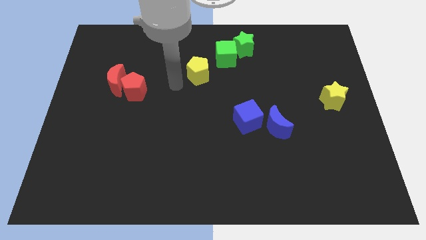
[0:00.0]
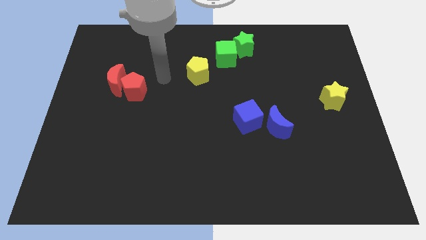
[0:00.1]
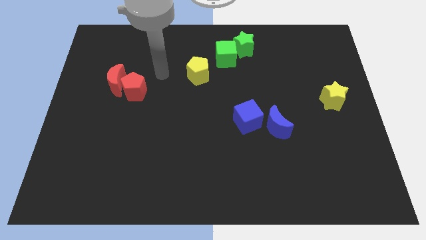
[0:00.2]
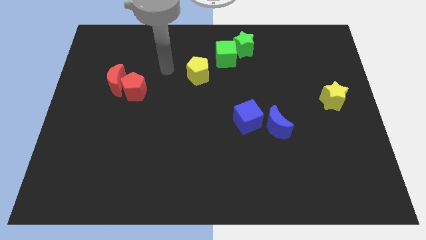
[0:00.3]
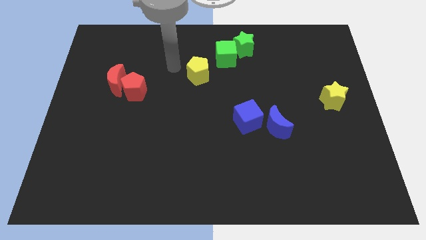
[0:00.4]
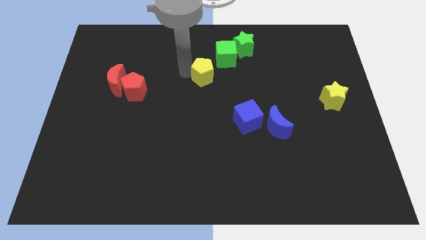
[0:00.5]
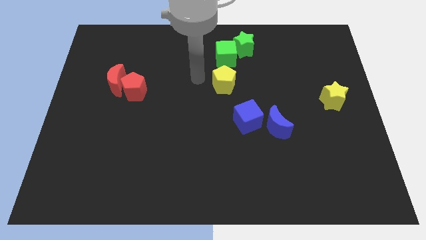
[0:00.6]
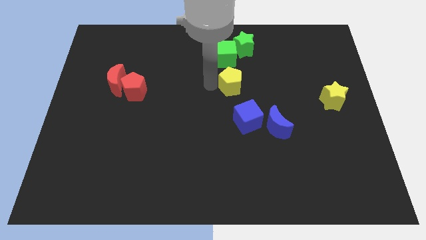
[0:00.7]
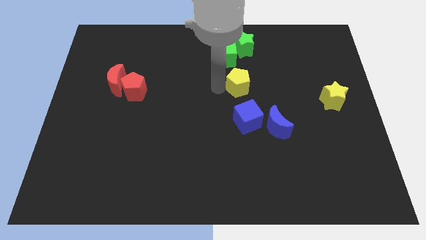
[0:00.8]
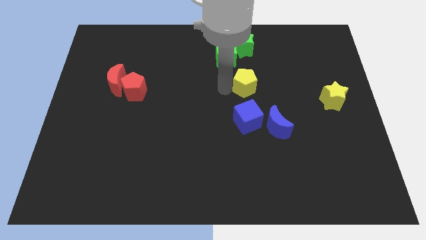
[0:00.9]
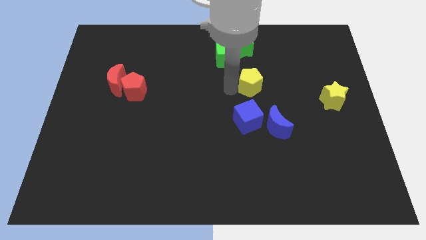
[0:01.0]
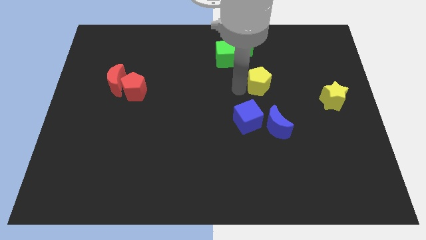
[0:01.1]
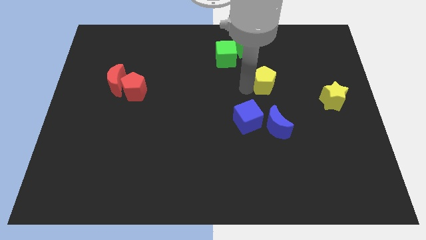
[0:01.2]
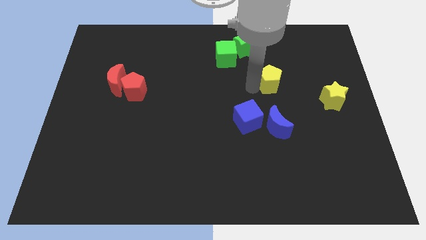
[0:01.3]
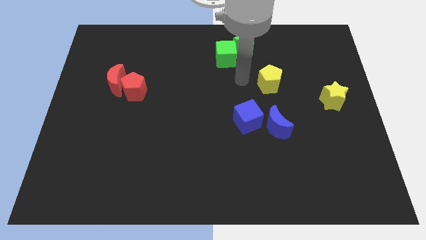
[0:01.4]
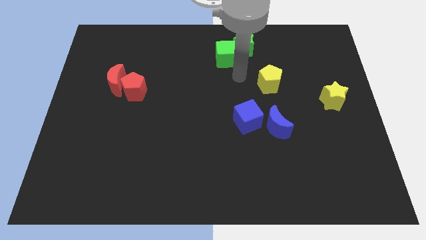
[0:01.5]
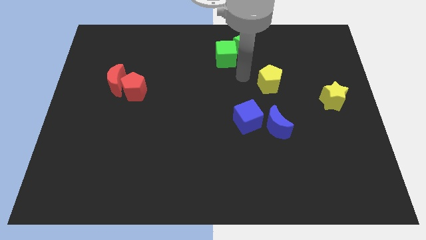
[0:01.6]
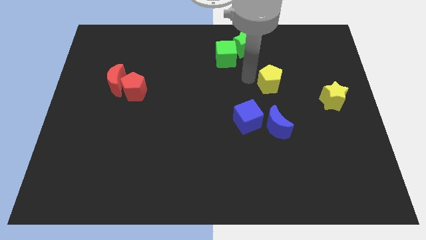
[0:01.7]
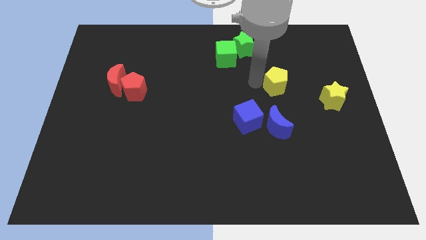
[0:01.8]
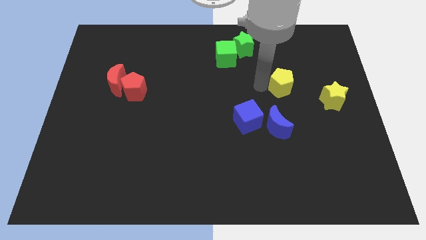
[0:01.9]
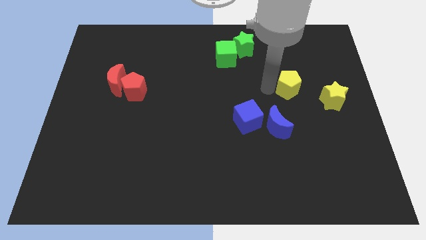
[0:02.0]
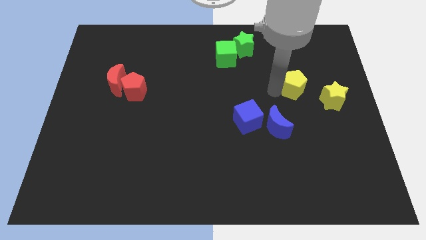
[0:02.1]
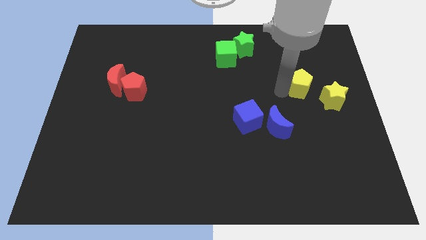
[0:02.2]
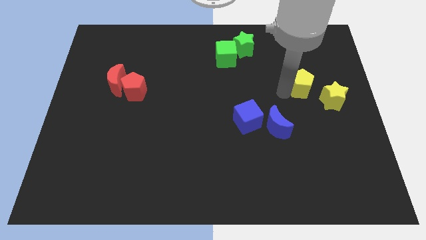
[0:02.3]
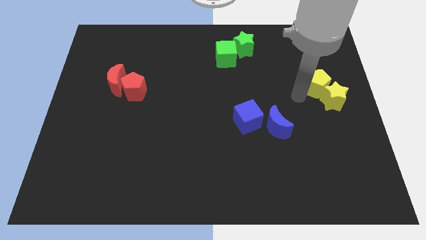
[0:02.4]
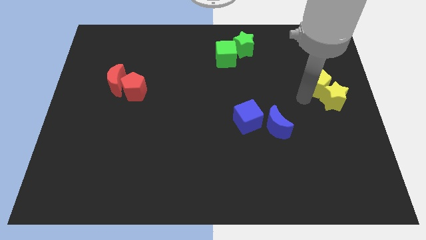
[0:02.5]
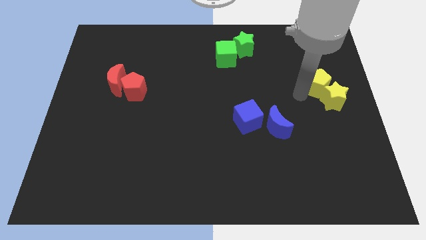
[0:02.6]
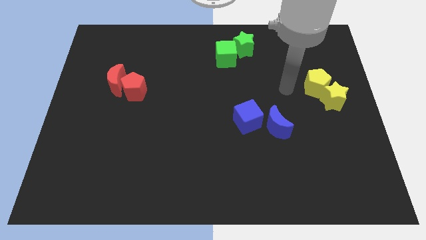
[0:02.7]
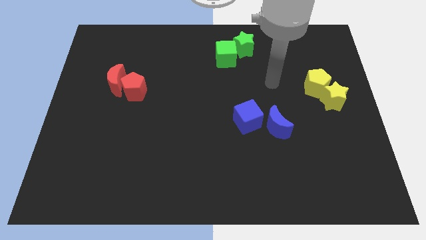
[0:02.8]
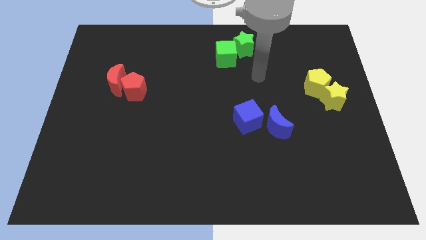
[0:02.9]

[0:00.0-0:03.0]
move the yellow pentagon into yellow star diagonally

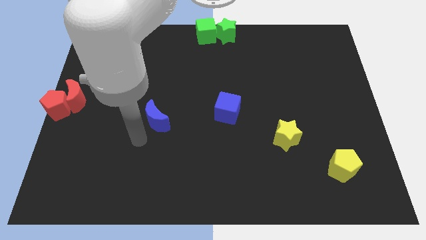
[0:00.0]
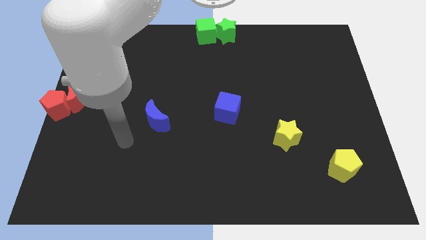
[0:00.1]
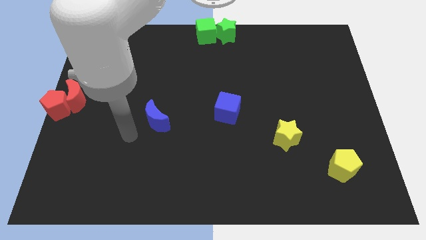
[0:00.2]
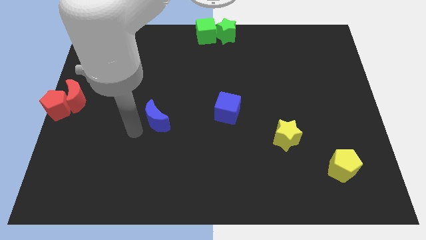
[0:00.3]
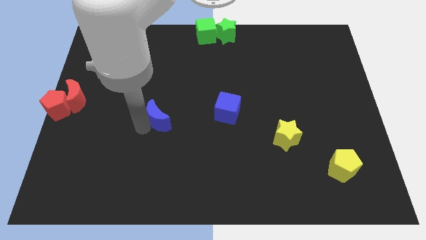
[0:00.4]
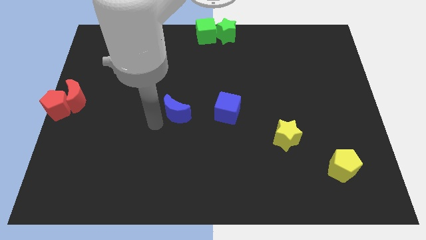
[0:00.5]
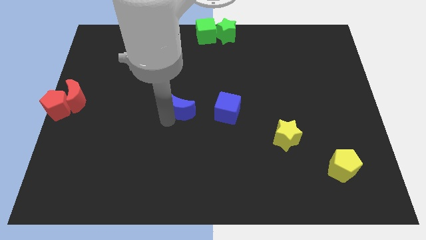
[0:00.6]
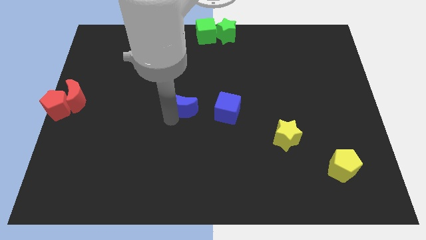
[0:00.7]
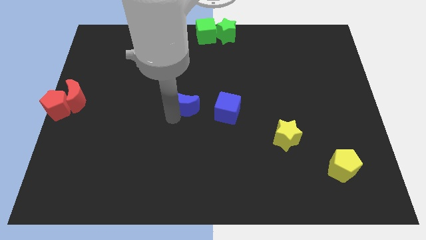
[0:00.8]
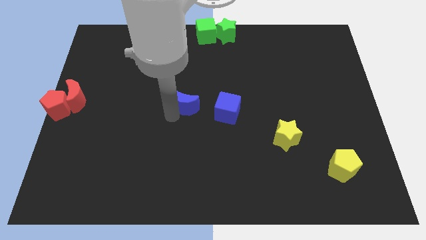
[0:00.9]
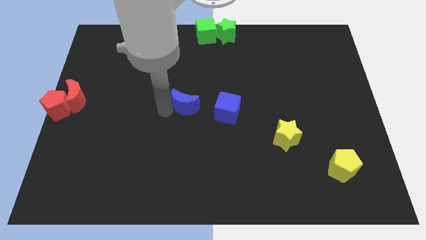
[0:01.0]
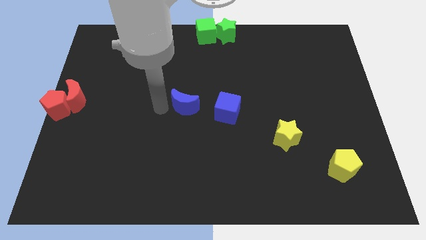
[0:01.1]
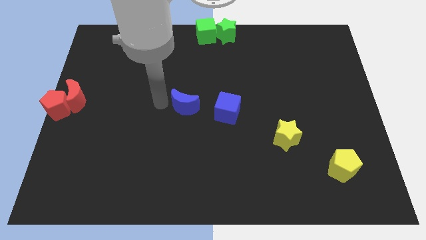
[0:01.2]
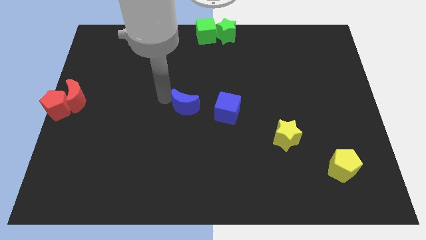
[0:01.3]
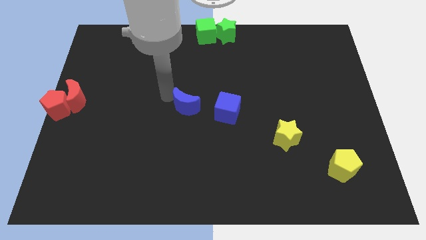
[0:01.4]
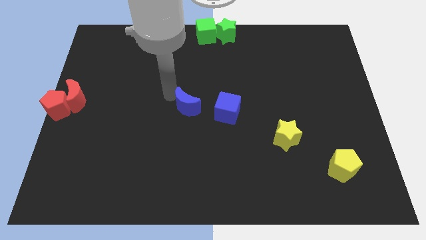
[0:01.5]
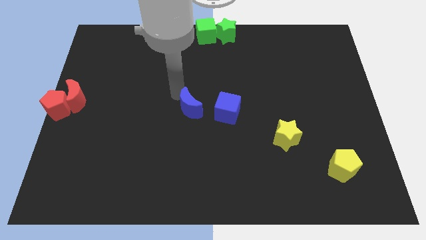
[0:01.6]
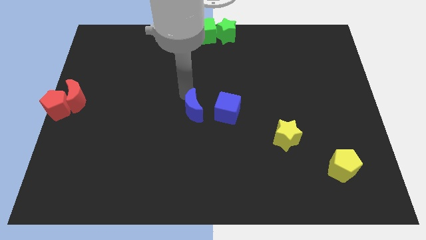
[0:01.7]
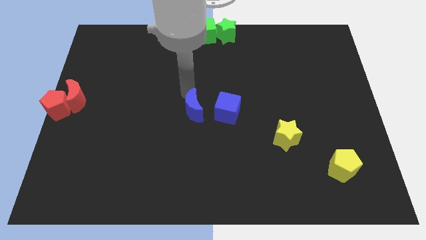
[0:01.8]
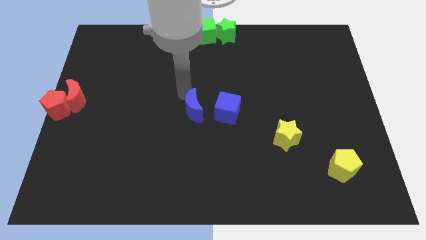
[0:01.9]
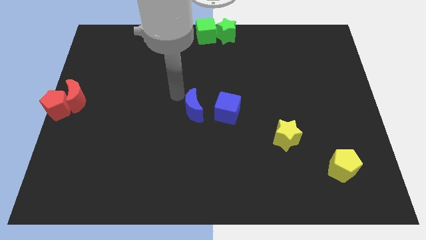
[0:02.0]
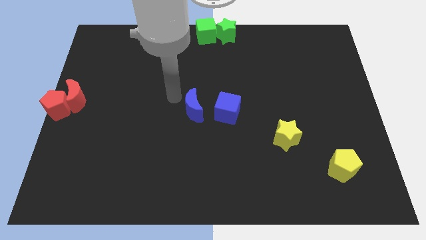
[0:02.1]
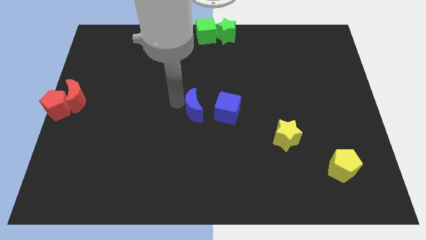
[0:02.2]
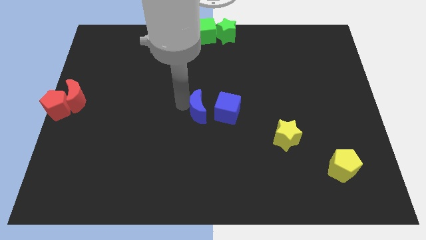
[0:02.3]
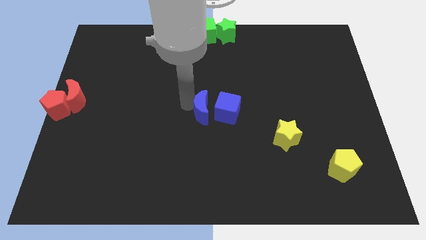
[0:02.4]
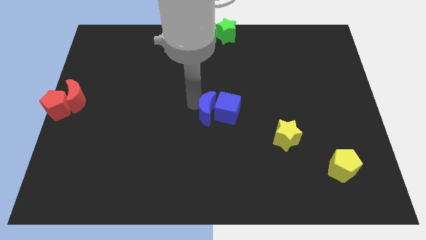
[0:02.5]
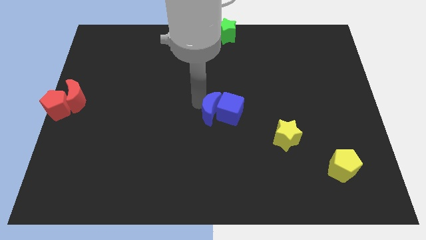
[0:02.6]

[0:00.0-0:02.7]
place the blue crescent left to the blue cube

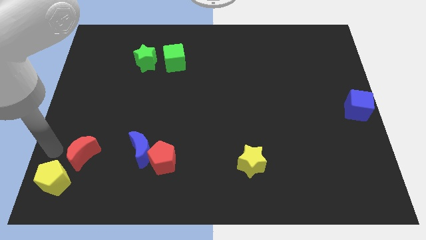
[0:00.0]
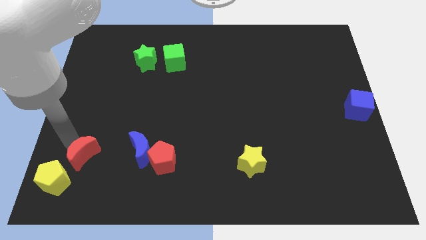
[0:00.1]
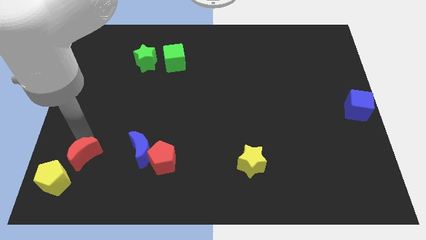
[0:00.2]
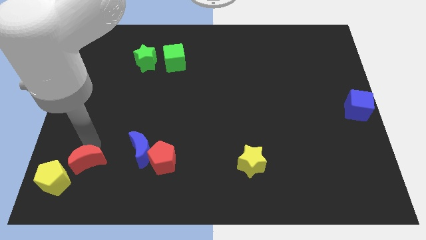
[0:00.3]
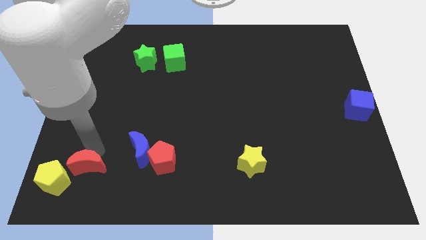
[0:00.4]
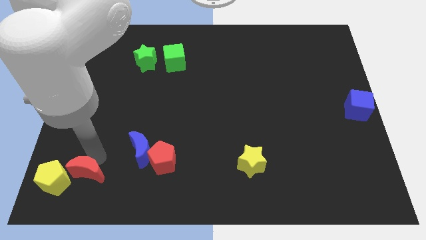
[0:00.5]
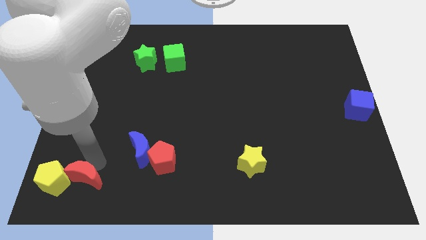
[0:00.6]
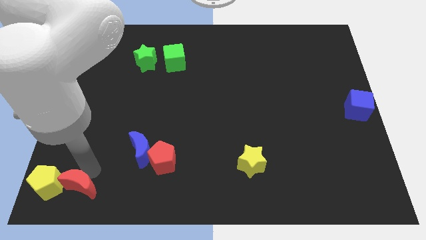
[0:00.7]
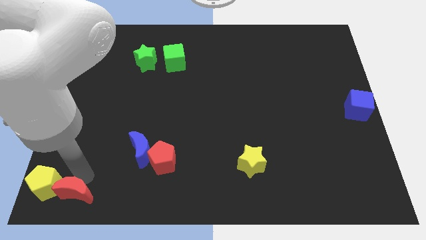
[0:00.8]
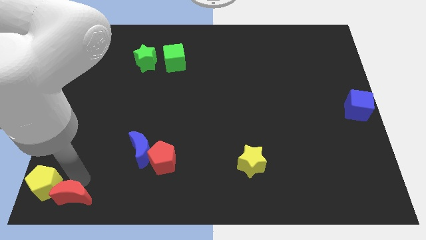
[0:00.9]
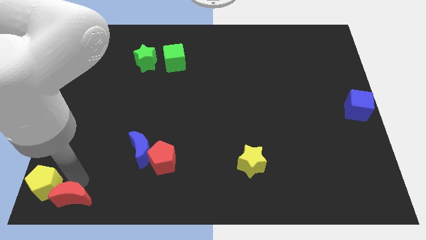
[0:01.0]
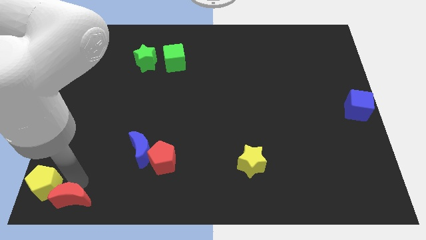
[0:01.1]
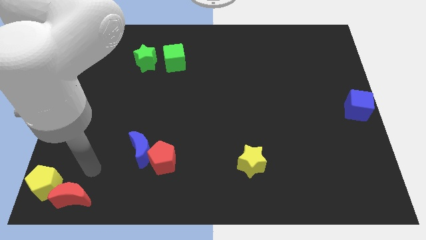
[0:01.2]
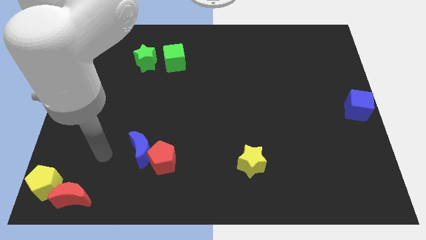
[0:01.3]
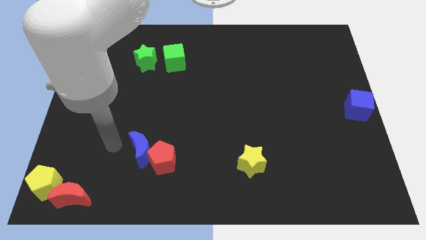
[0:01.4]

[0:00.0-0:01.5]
move the red crescent slightly towards down

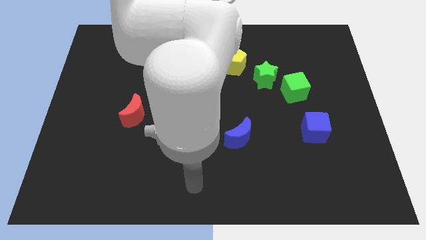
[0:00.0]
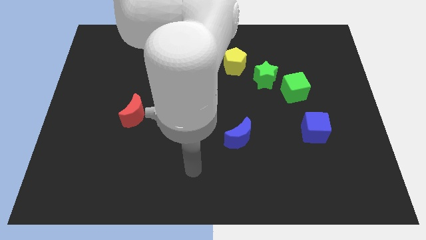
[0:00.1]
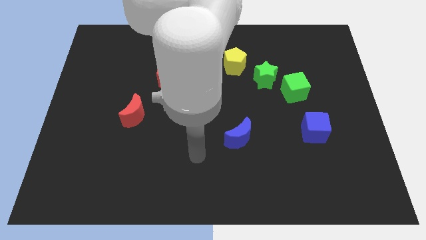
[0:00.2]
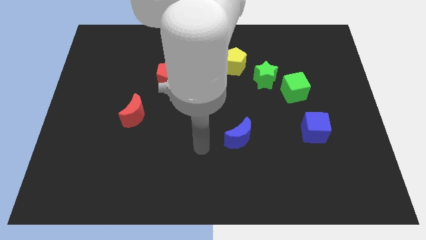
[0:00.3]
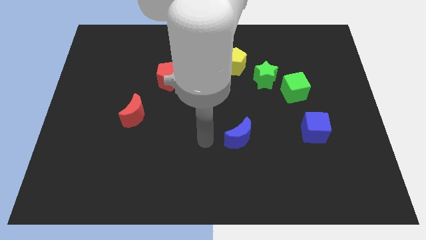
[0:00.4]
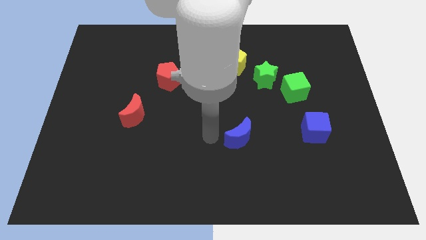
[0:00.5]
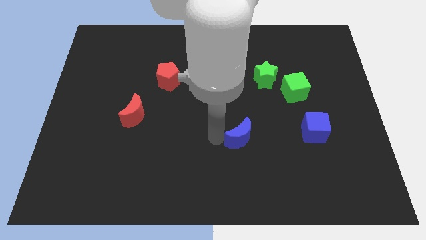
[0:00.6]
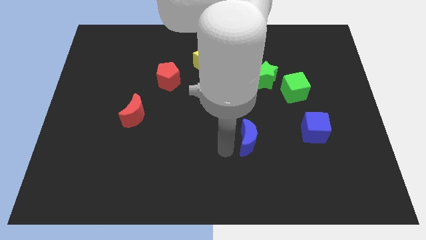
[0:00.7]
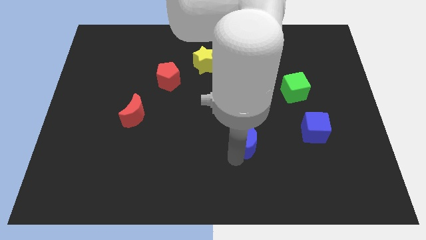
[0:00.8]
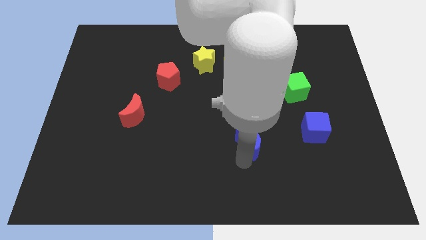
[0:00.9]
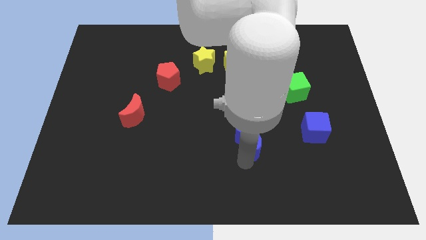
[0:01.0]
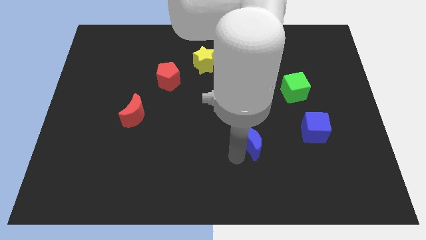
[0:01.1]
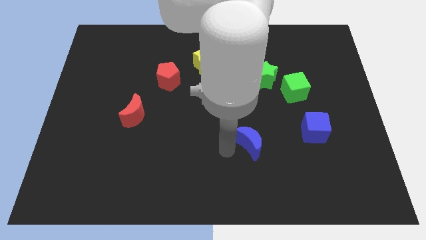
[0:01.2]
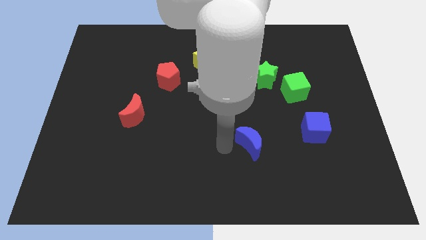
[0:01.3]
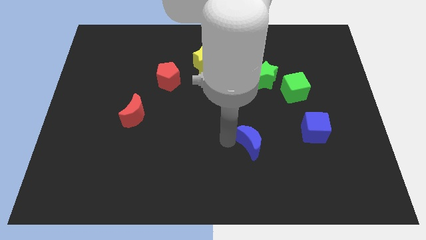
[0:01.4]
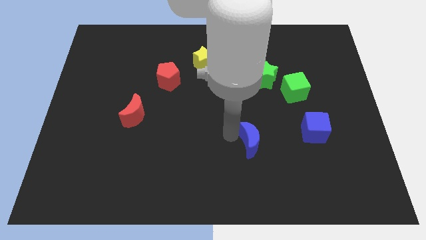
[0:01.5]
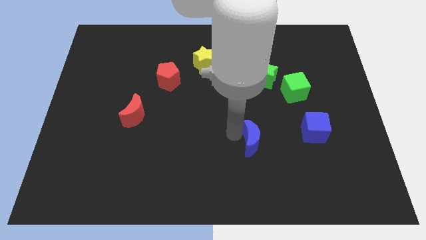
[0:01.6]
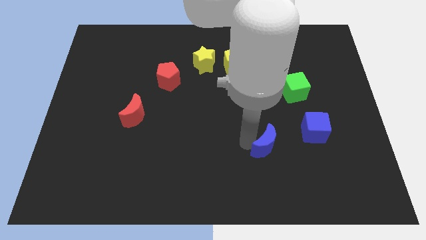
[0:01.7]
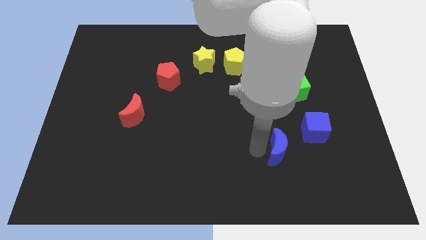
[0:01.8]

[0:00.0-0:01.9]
move the blue crescent towards the blue cube
